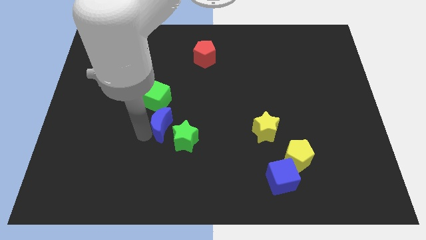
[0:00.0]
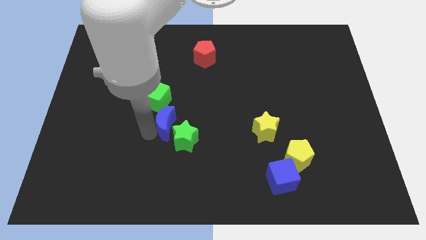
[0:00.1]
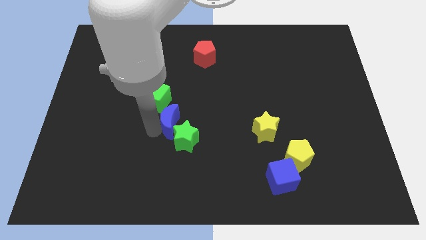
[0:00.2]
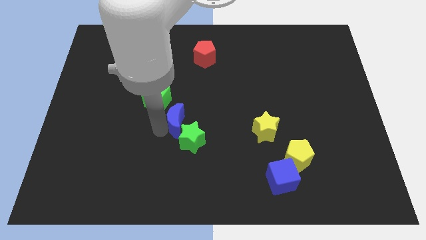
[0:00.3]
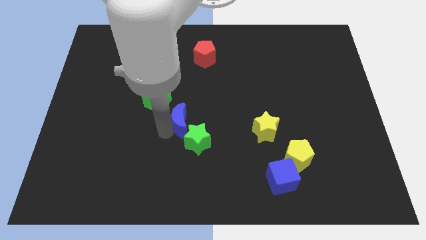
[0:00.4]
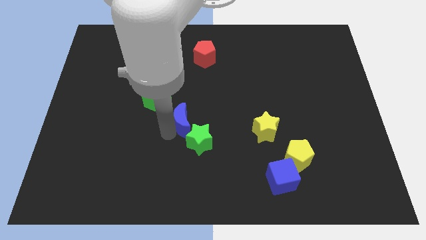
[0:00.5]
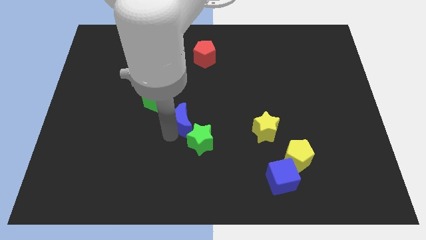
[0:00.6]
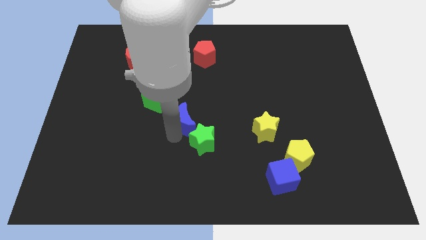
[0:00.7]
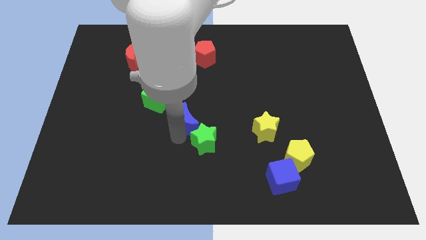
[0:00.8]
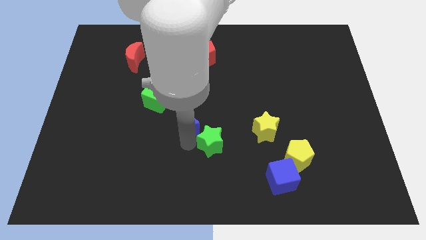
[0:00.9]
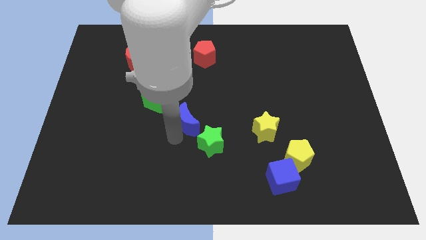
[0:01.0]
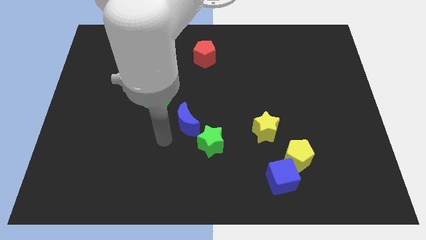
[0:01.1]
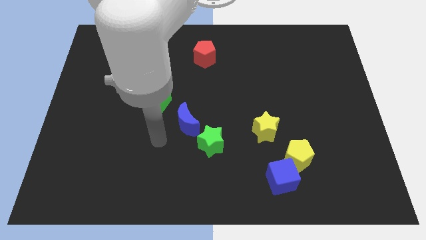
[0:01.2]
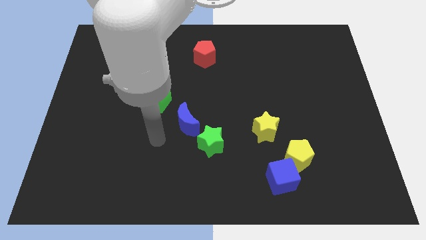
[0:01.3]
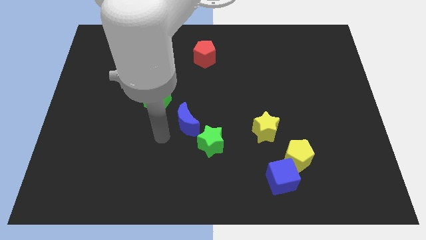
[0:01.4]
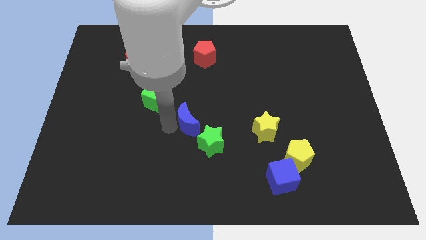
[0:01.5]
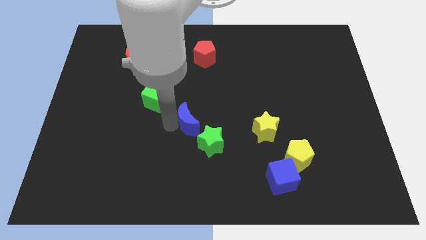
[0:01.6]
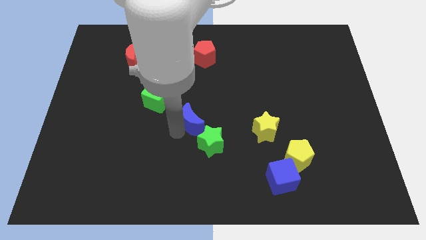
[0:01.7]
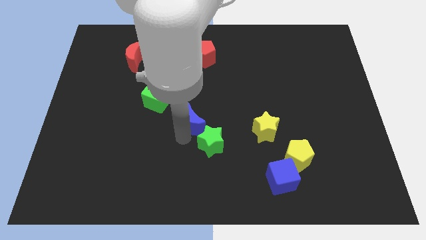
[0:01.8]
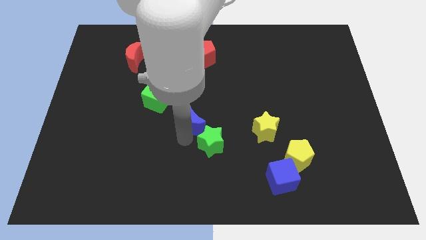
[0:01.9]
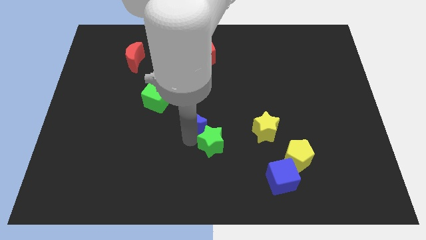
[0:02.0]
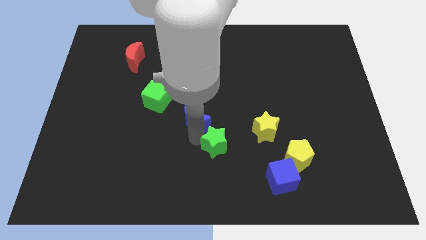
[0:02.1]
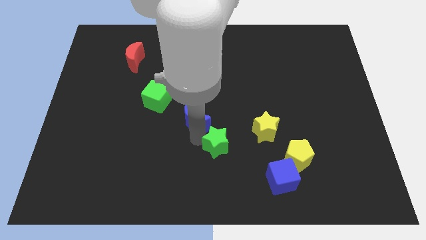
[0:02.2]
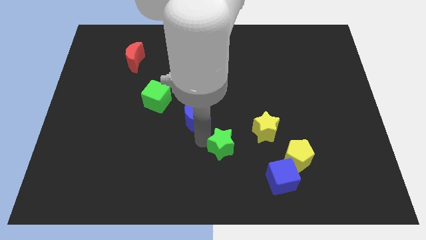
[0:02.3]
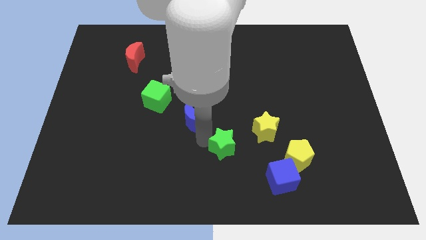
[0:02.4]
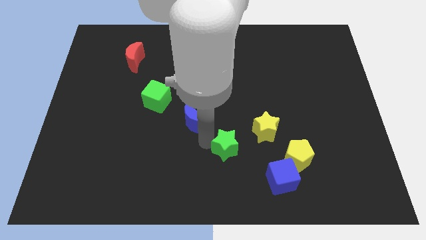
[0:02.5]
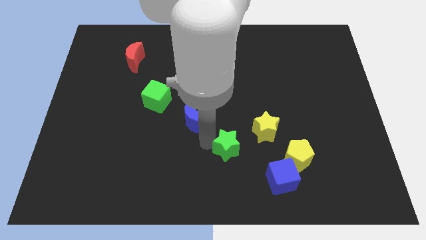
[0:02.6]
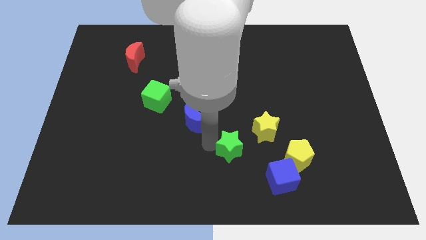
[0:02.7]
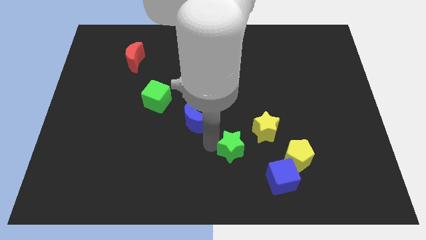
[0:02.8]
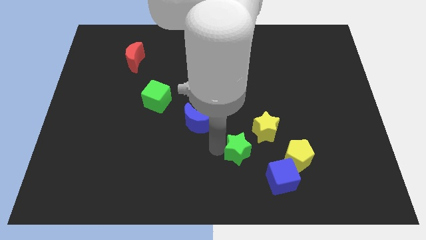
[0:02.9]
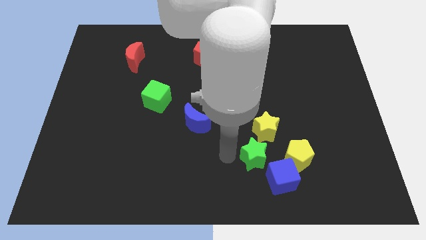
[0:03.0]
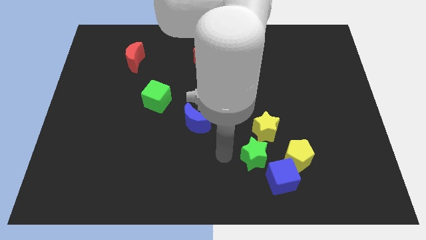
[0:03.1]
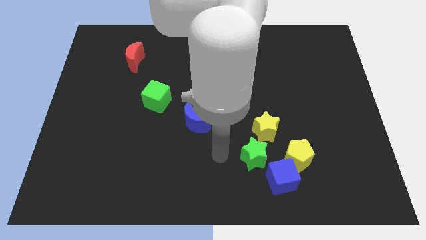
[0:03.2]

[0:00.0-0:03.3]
place the blue crescent and green star in a diagonal line with the green cube

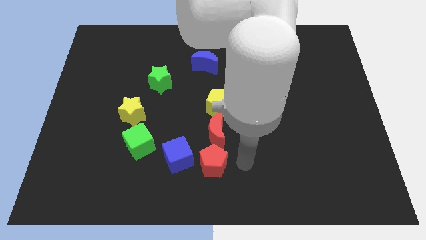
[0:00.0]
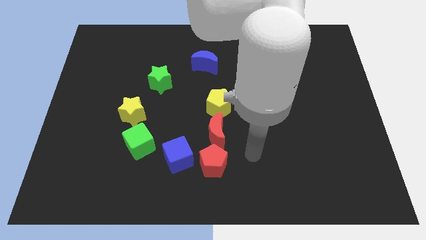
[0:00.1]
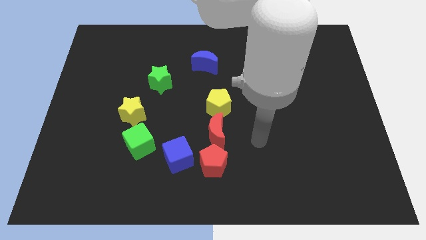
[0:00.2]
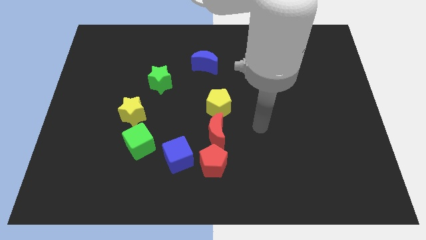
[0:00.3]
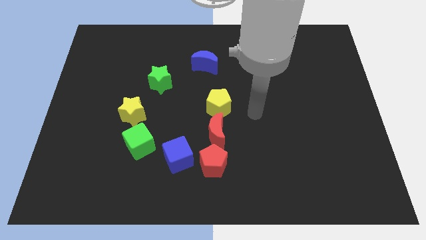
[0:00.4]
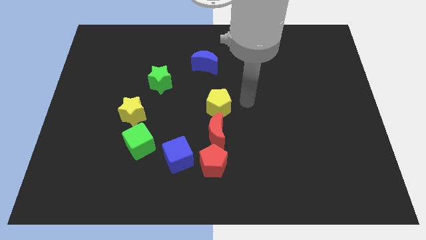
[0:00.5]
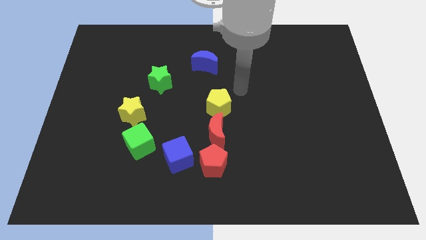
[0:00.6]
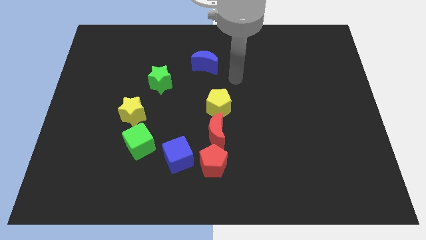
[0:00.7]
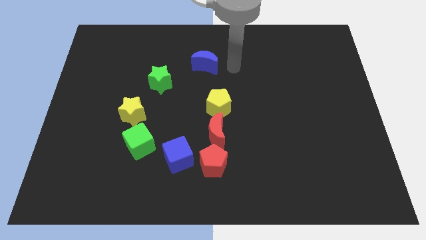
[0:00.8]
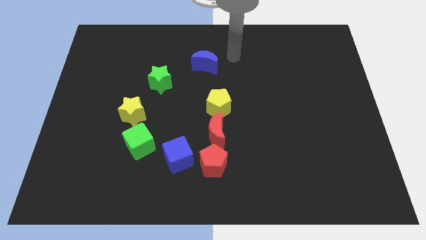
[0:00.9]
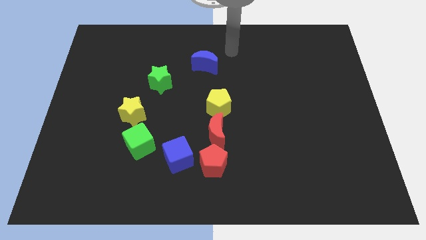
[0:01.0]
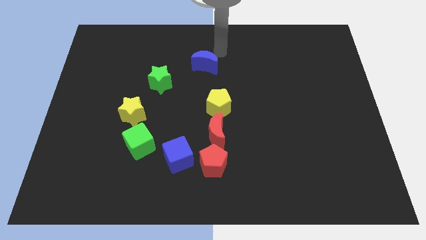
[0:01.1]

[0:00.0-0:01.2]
move your arm around

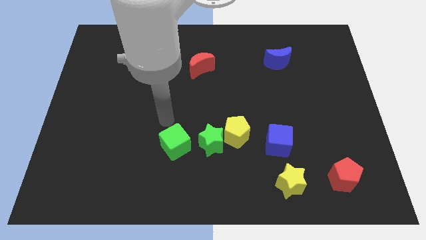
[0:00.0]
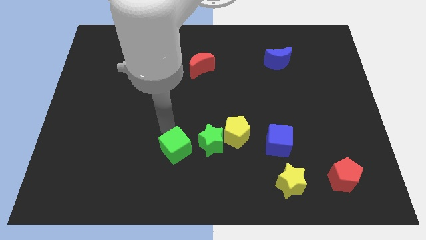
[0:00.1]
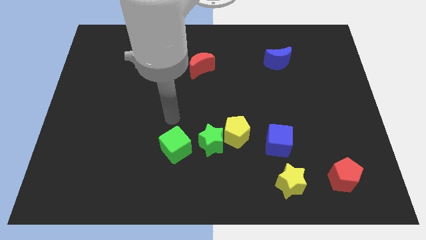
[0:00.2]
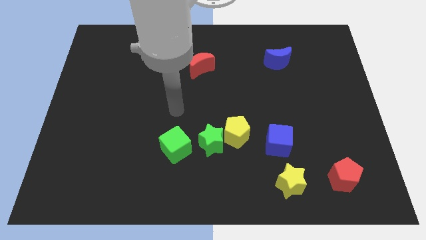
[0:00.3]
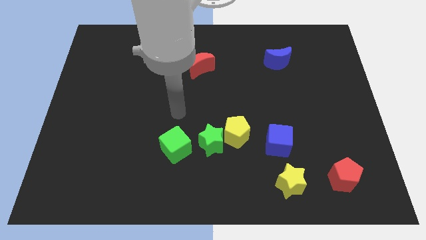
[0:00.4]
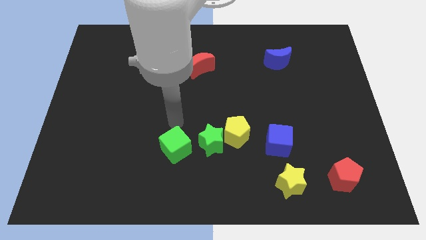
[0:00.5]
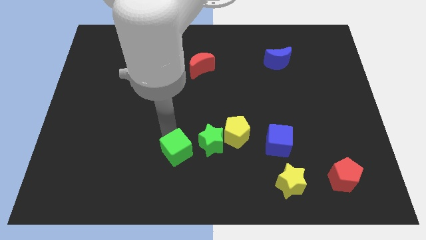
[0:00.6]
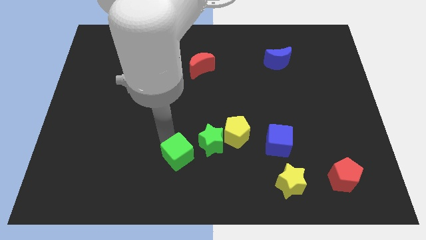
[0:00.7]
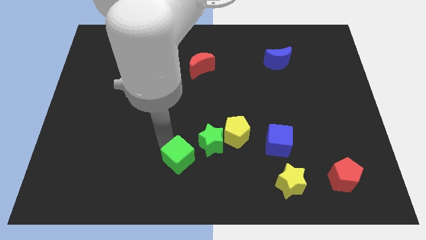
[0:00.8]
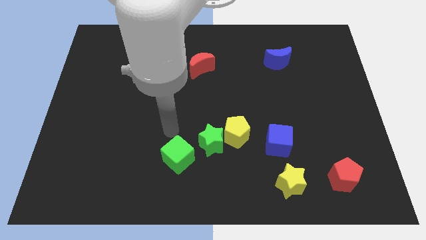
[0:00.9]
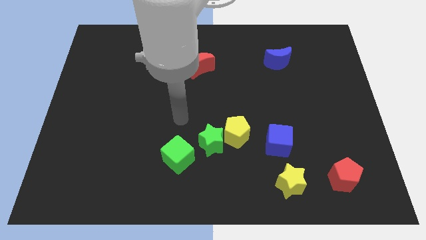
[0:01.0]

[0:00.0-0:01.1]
push the green cube slightly down

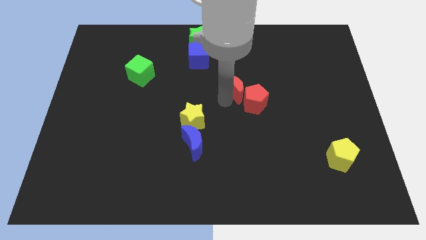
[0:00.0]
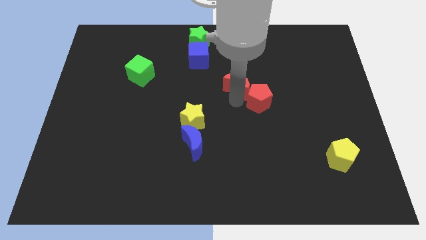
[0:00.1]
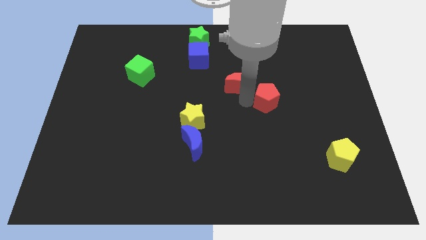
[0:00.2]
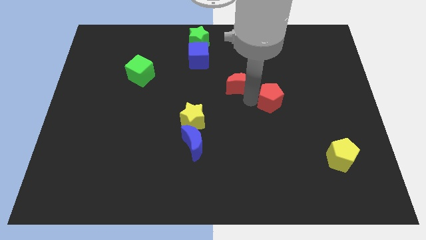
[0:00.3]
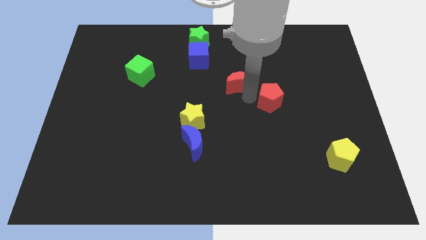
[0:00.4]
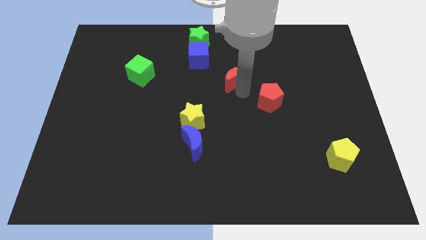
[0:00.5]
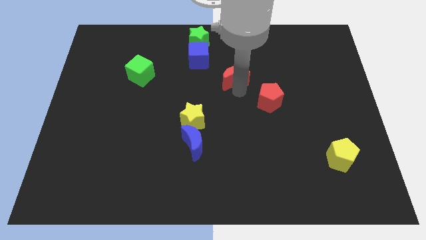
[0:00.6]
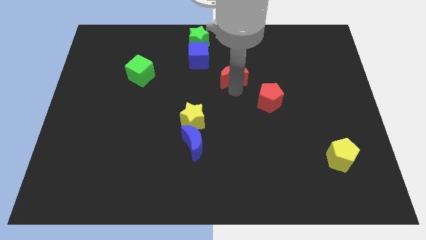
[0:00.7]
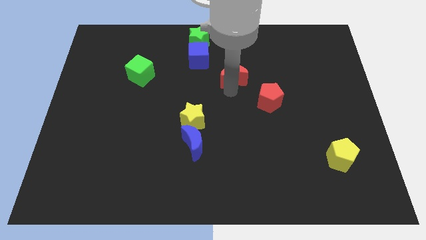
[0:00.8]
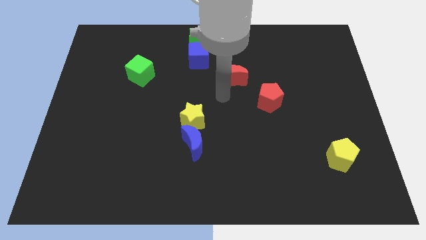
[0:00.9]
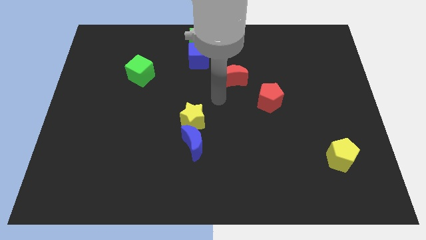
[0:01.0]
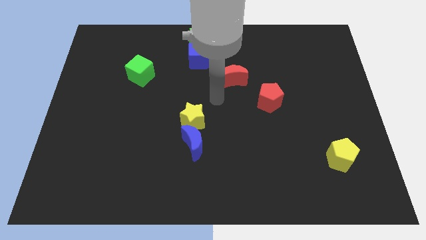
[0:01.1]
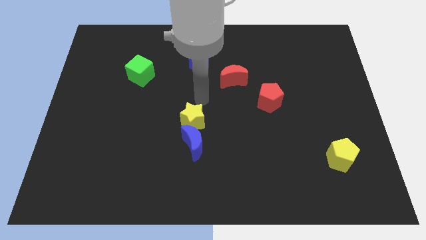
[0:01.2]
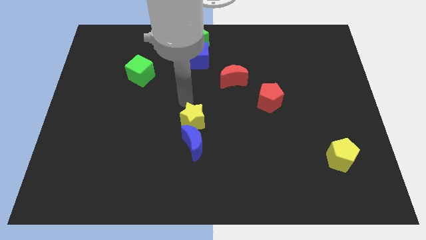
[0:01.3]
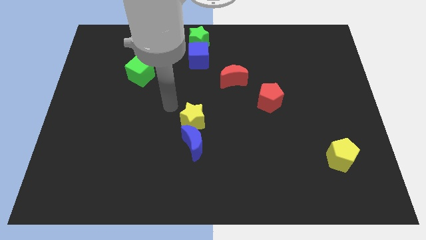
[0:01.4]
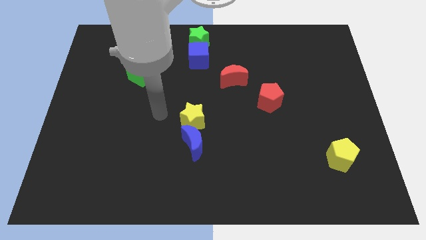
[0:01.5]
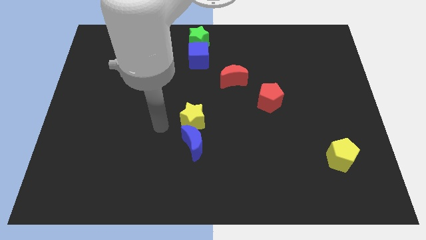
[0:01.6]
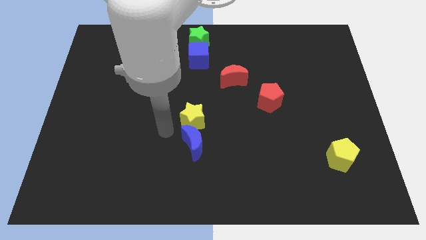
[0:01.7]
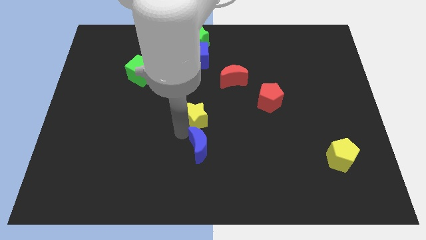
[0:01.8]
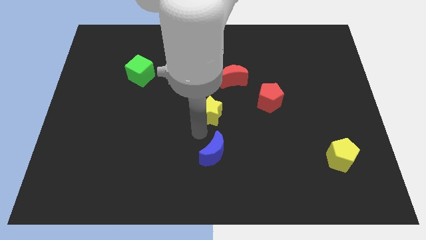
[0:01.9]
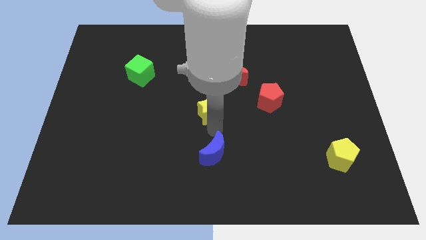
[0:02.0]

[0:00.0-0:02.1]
move the green star to the center

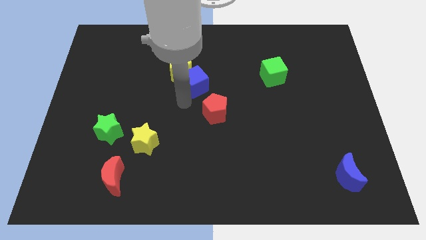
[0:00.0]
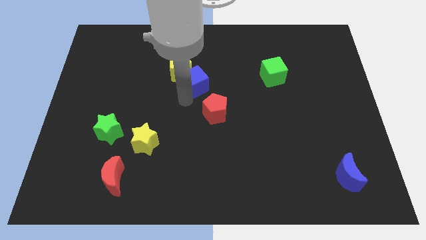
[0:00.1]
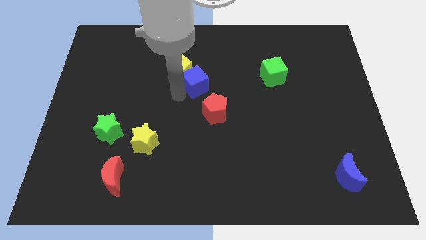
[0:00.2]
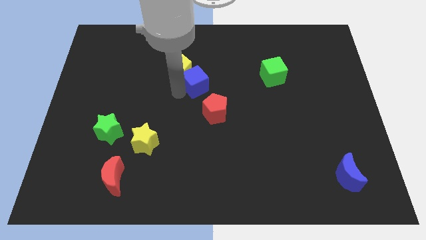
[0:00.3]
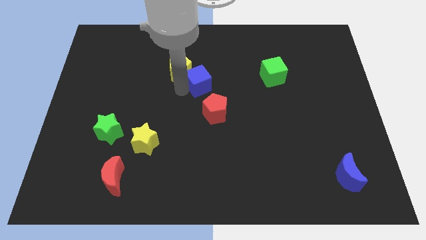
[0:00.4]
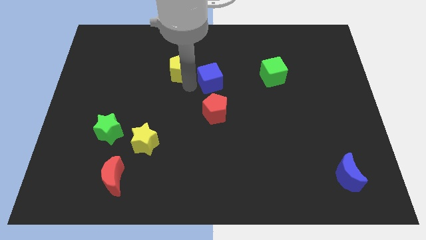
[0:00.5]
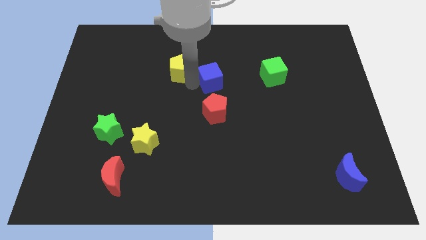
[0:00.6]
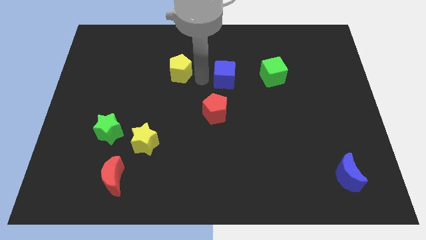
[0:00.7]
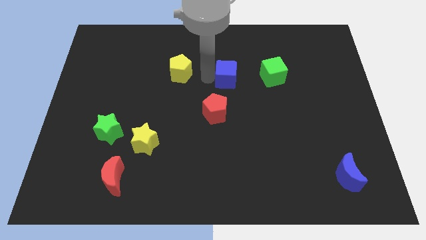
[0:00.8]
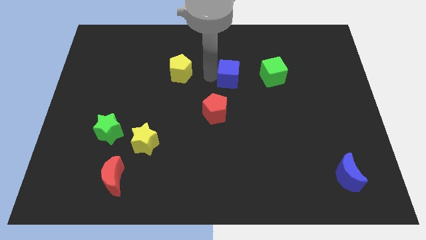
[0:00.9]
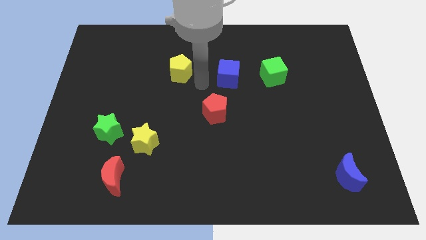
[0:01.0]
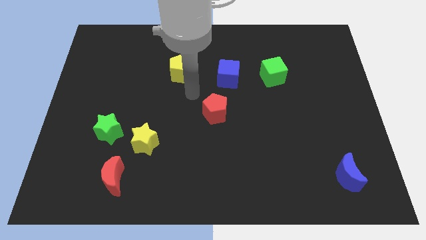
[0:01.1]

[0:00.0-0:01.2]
push the blue cube in between the yellow pentagon and green cube

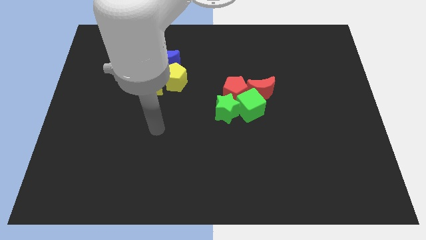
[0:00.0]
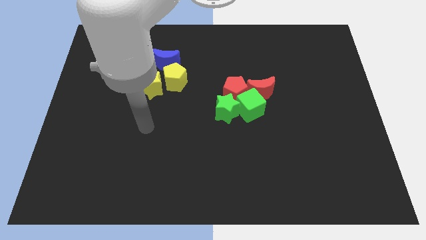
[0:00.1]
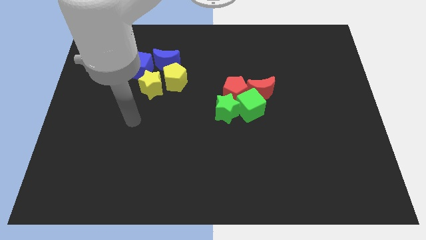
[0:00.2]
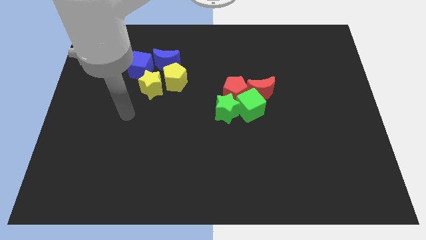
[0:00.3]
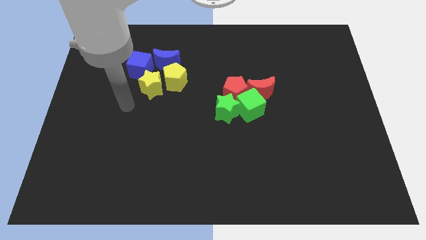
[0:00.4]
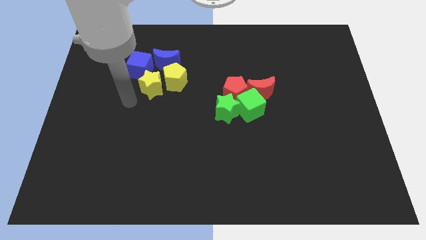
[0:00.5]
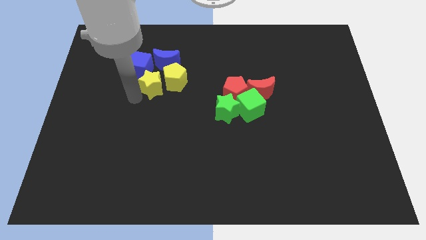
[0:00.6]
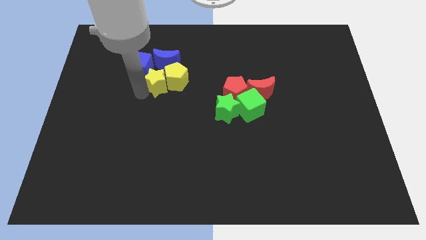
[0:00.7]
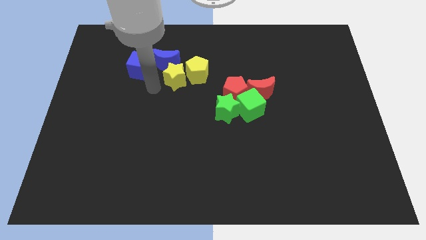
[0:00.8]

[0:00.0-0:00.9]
push yellow star below blue crescent
